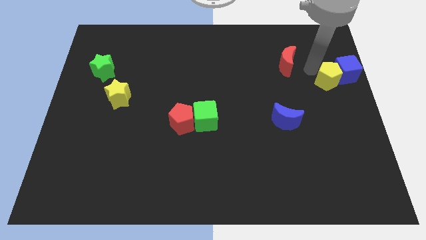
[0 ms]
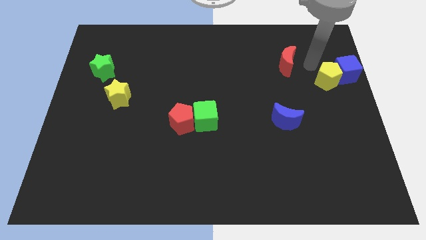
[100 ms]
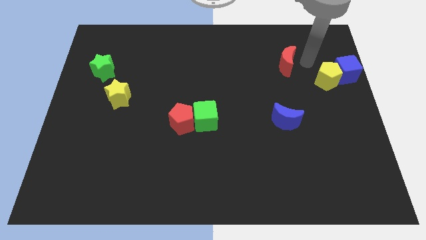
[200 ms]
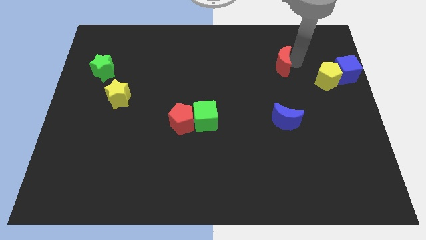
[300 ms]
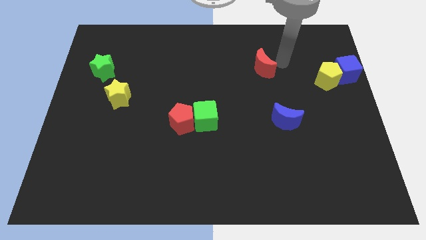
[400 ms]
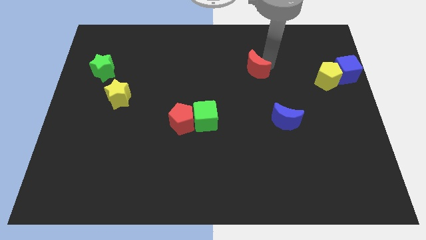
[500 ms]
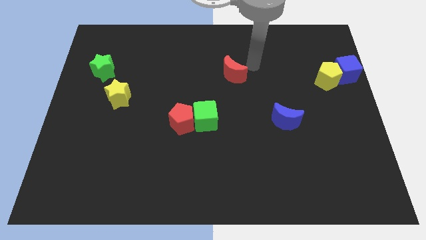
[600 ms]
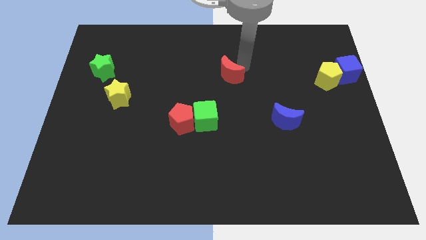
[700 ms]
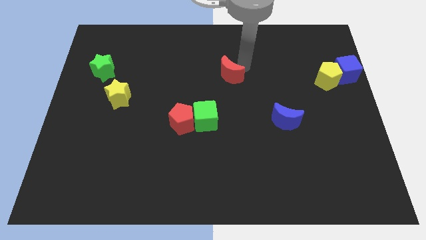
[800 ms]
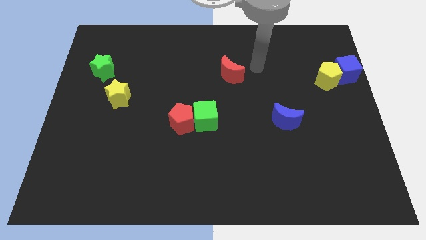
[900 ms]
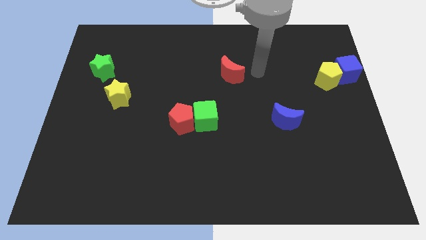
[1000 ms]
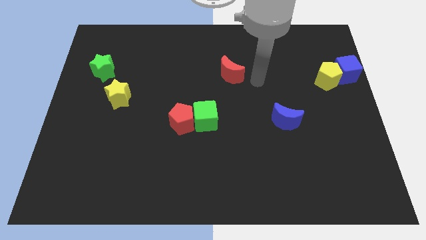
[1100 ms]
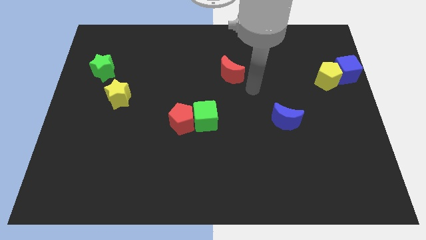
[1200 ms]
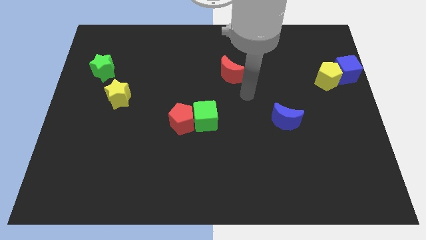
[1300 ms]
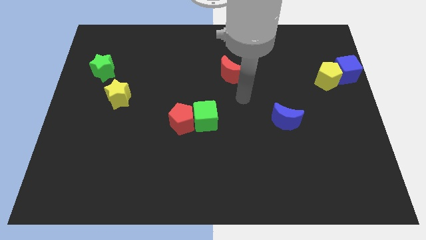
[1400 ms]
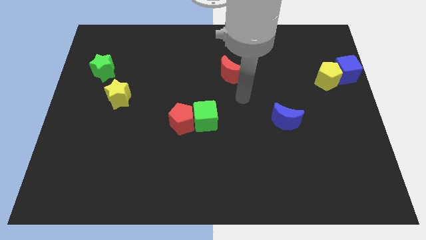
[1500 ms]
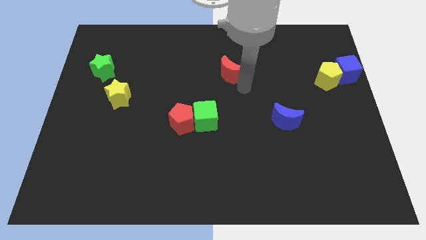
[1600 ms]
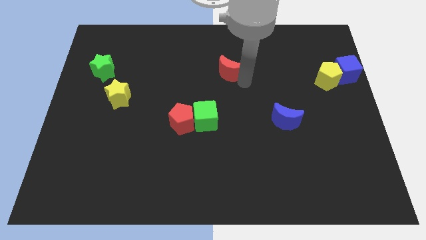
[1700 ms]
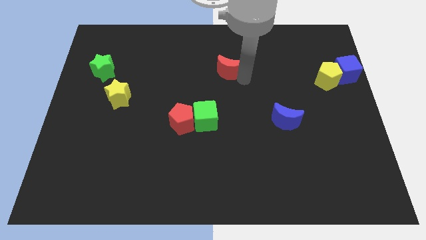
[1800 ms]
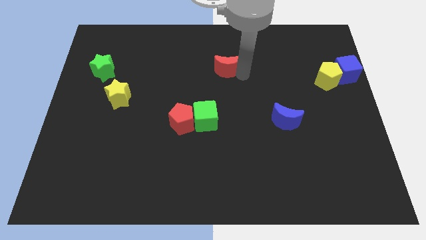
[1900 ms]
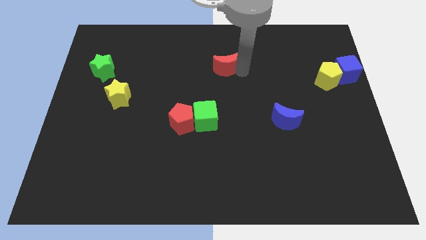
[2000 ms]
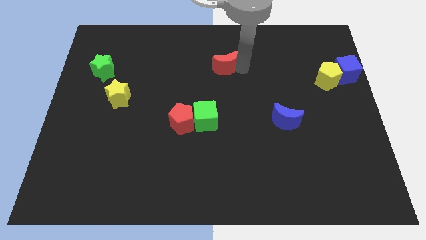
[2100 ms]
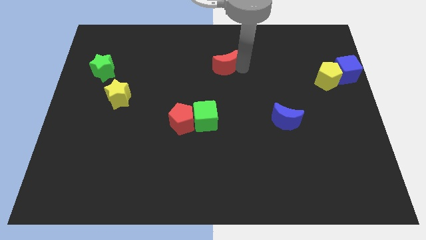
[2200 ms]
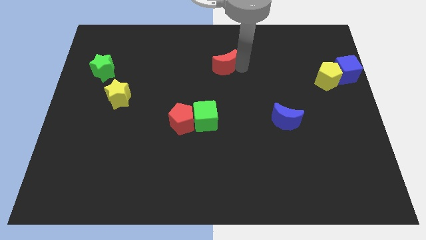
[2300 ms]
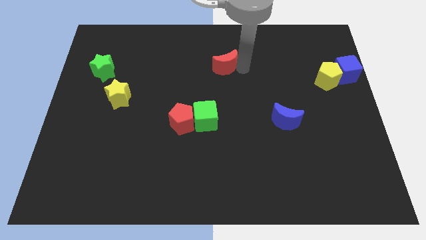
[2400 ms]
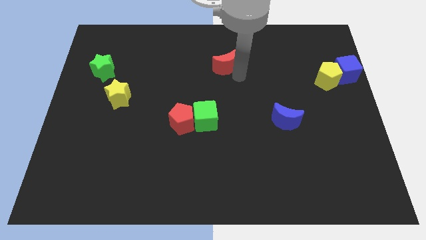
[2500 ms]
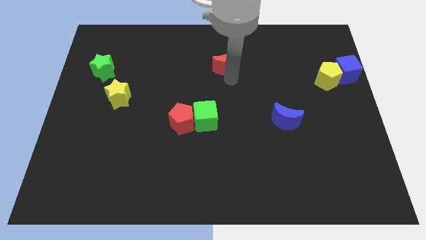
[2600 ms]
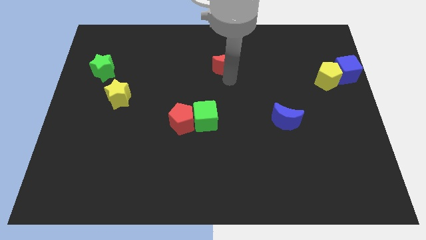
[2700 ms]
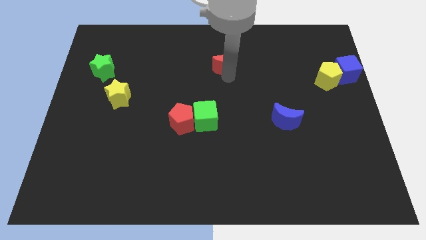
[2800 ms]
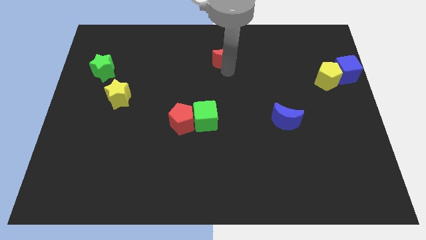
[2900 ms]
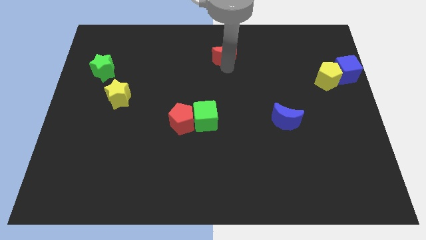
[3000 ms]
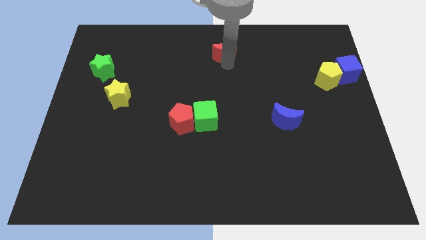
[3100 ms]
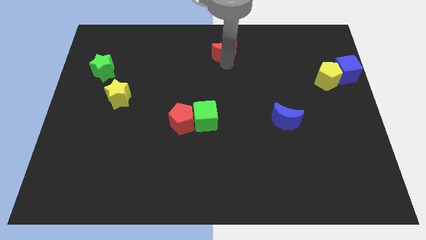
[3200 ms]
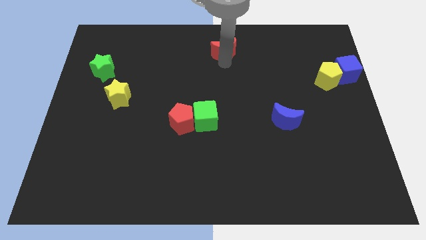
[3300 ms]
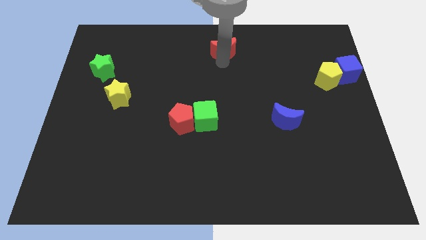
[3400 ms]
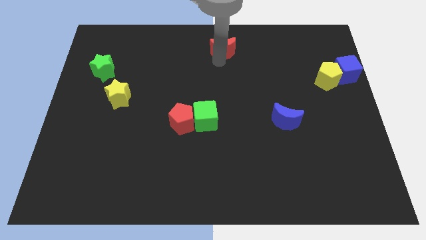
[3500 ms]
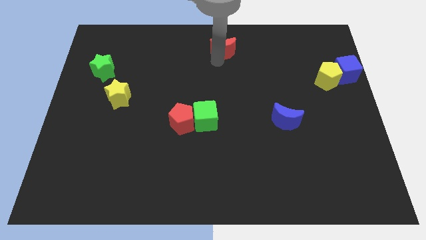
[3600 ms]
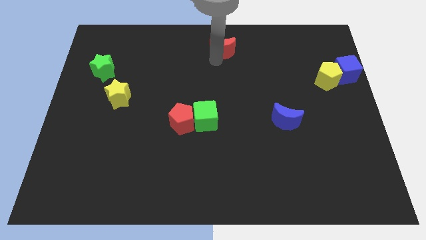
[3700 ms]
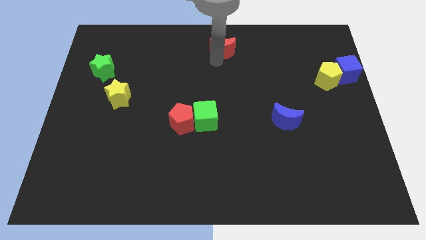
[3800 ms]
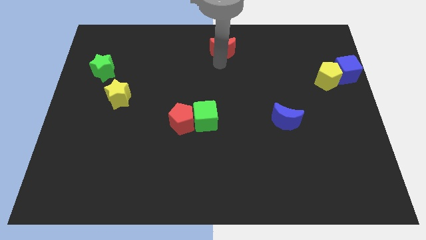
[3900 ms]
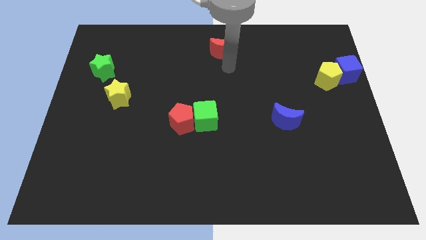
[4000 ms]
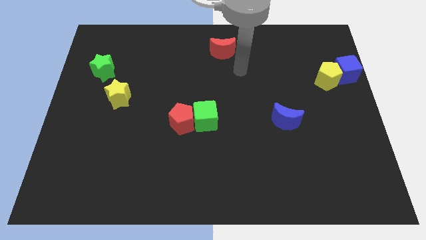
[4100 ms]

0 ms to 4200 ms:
push the red crescent to the top center of the board

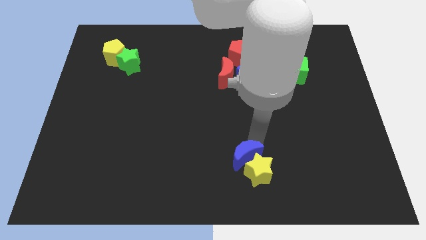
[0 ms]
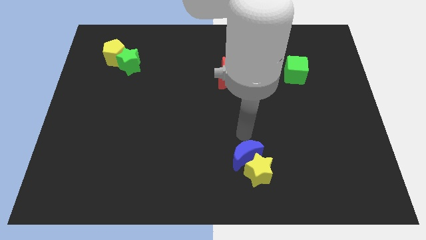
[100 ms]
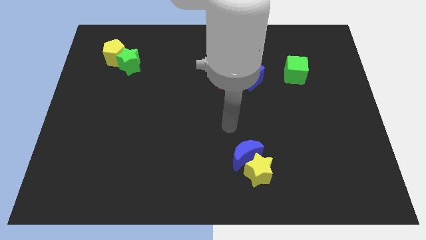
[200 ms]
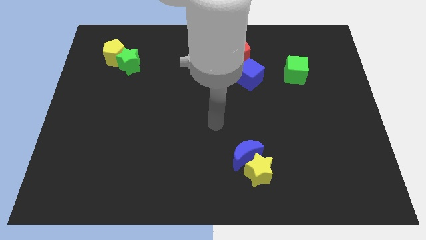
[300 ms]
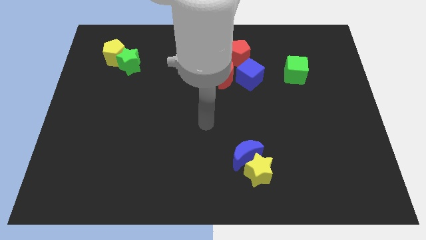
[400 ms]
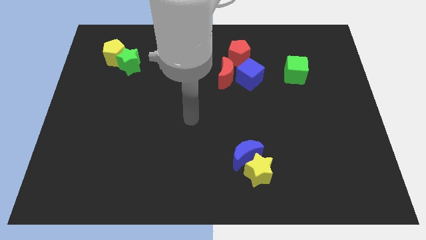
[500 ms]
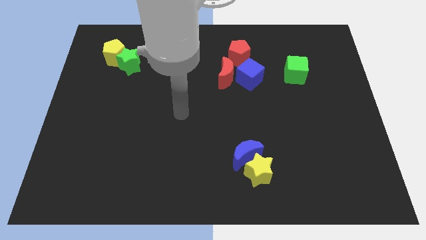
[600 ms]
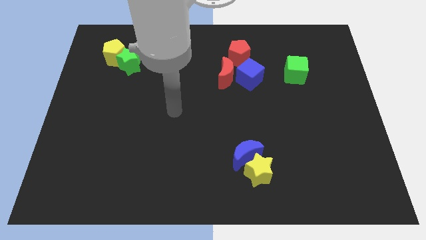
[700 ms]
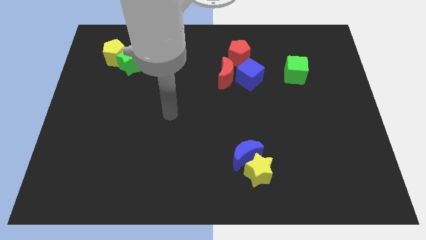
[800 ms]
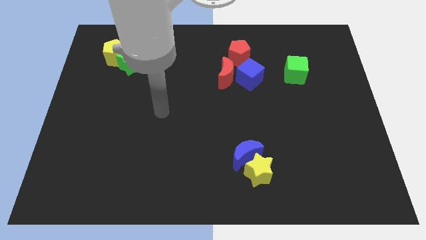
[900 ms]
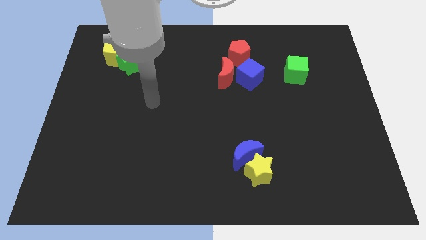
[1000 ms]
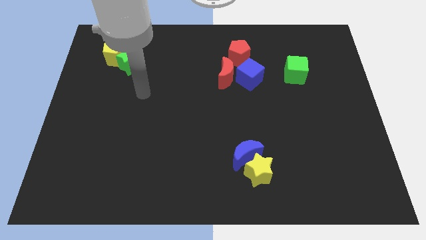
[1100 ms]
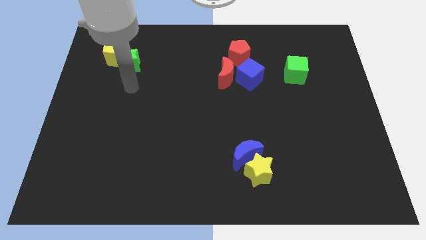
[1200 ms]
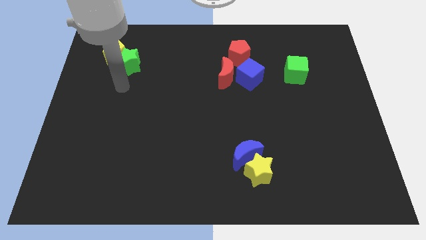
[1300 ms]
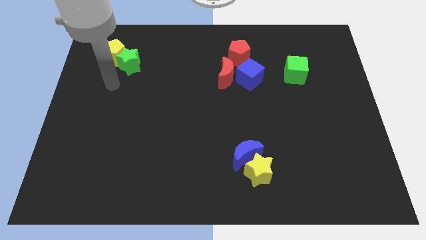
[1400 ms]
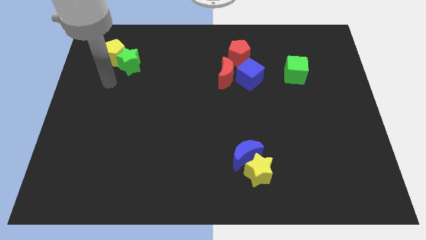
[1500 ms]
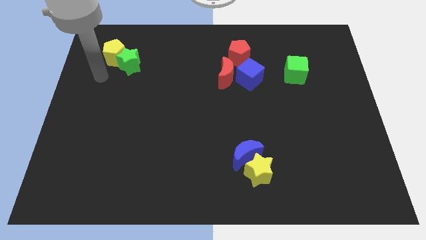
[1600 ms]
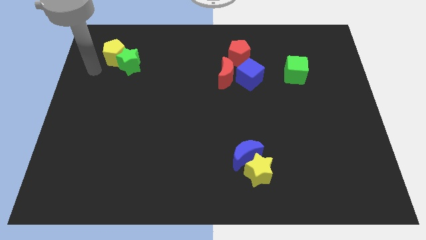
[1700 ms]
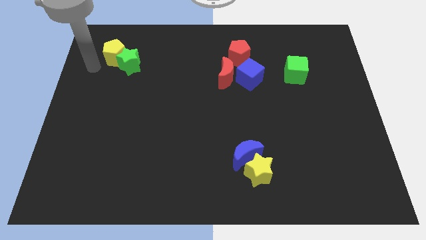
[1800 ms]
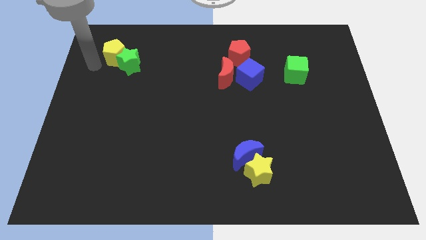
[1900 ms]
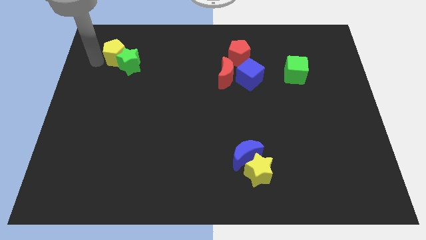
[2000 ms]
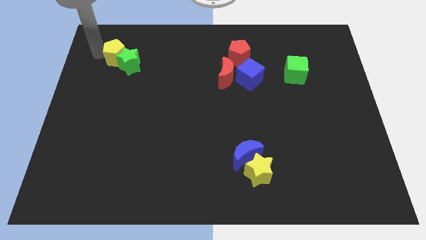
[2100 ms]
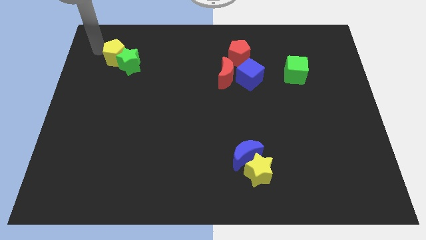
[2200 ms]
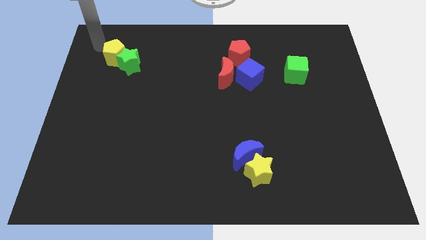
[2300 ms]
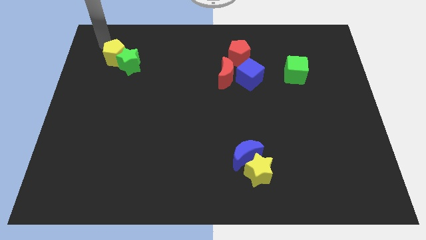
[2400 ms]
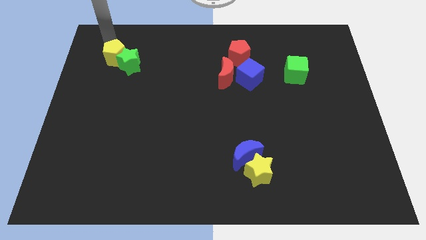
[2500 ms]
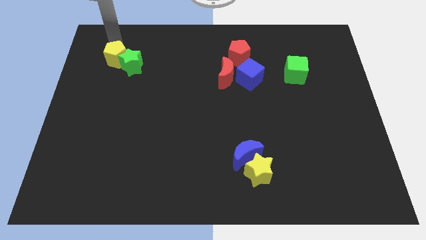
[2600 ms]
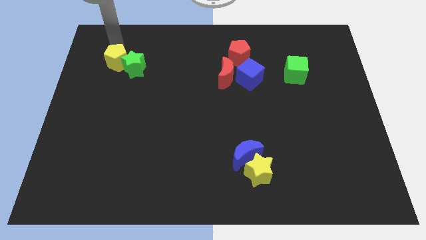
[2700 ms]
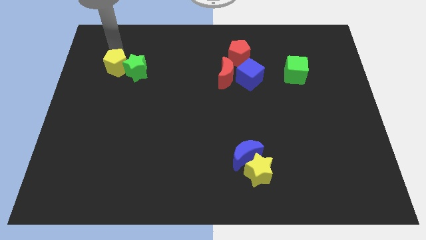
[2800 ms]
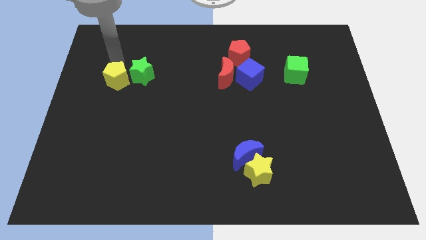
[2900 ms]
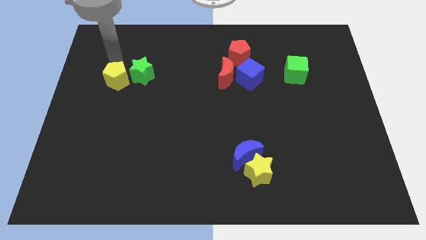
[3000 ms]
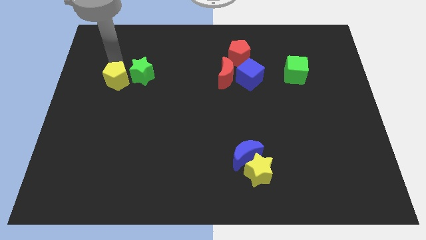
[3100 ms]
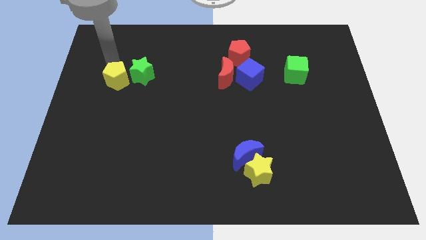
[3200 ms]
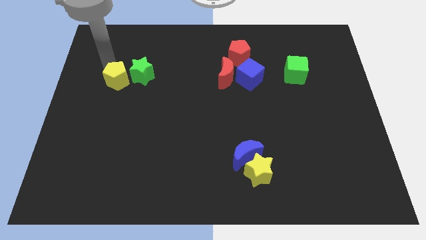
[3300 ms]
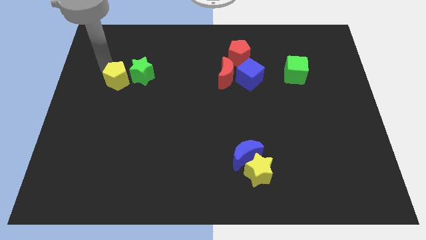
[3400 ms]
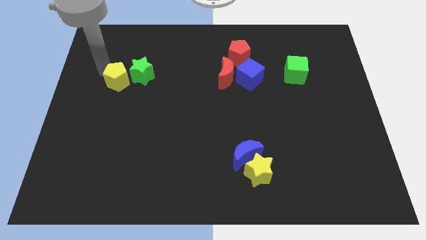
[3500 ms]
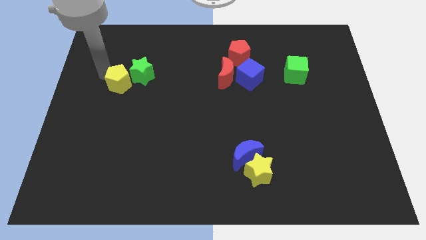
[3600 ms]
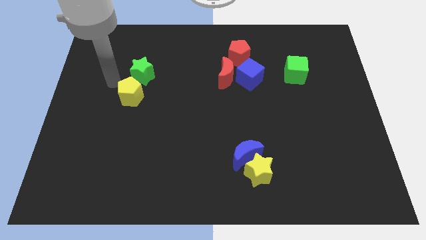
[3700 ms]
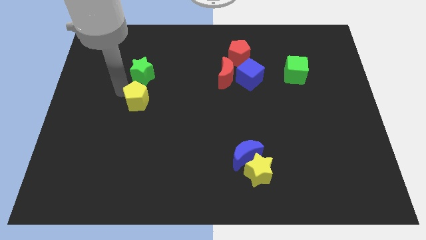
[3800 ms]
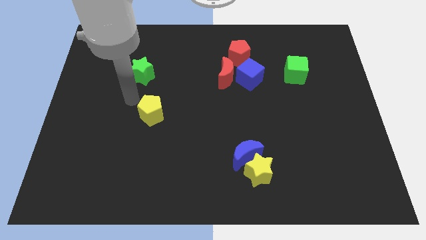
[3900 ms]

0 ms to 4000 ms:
separate the yellow pentagon from the green star

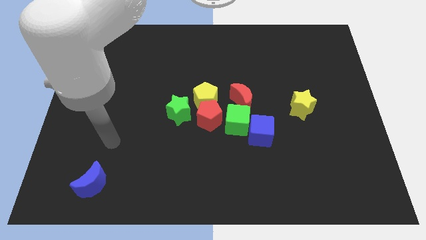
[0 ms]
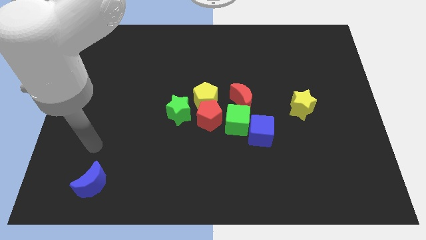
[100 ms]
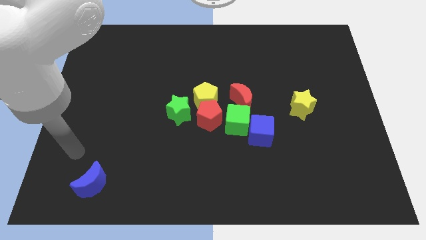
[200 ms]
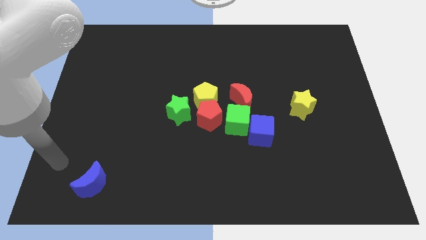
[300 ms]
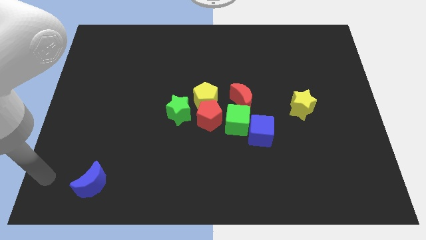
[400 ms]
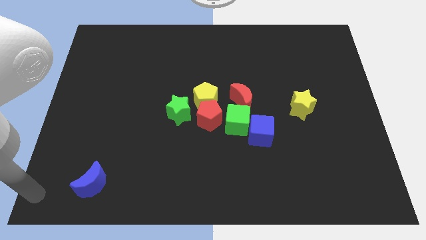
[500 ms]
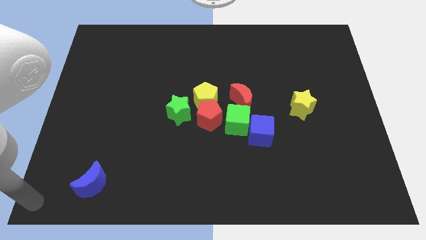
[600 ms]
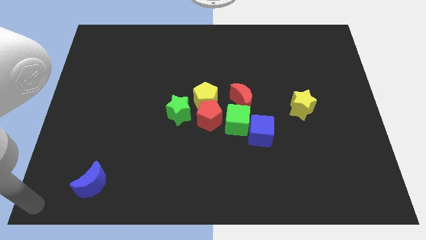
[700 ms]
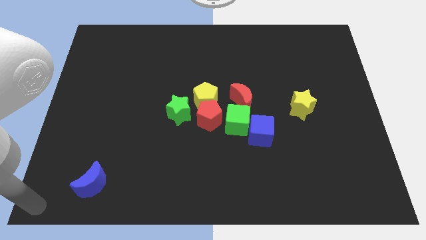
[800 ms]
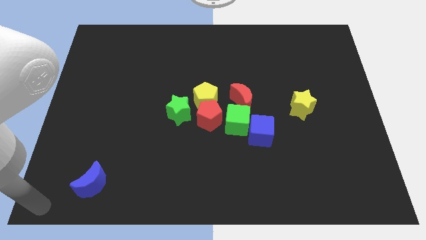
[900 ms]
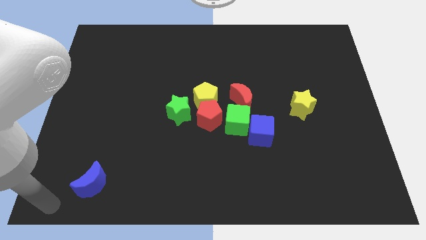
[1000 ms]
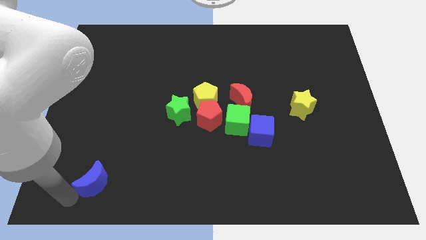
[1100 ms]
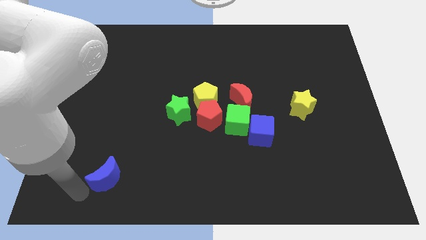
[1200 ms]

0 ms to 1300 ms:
place the arm near the blue moon
